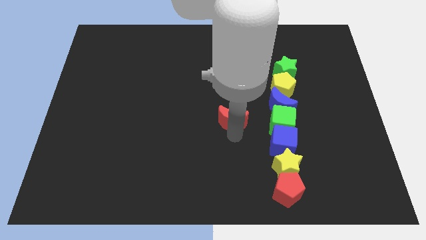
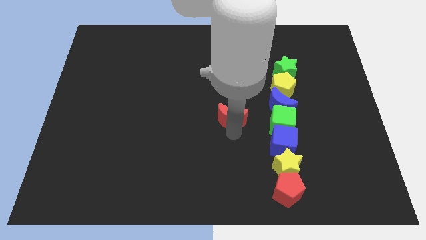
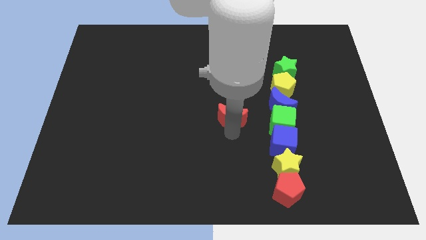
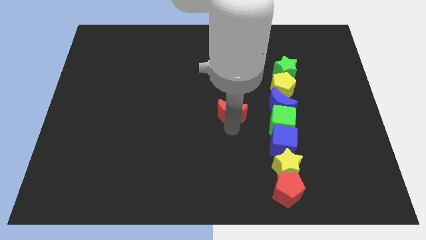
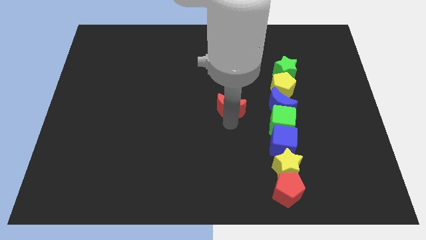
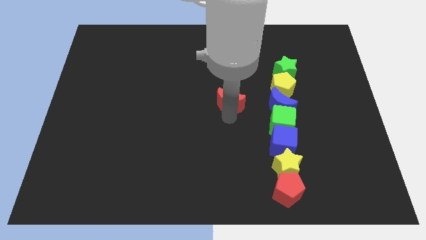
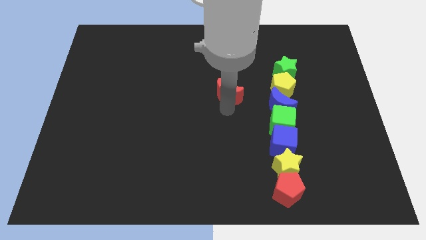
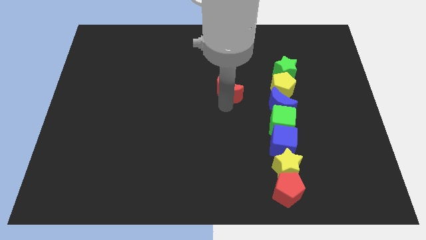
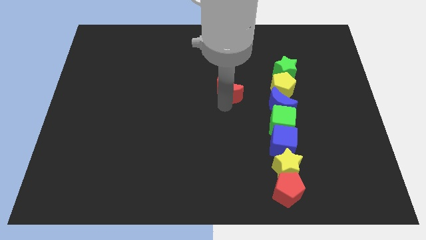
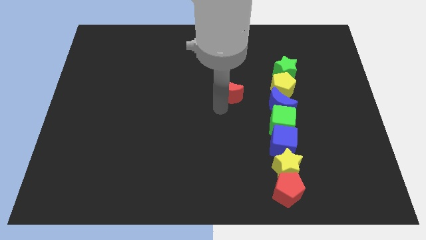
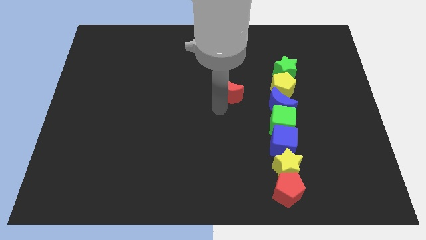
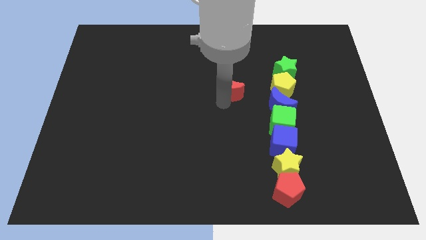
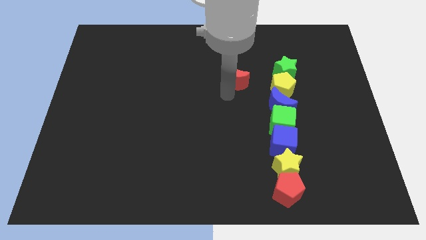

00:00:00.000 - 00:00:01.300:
move red moon upwards

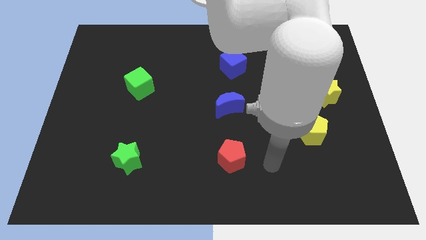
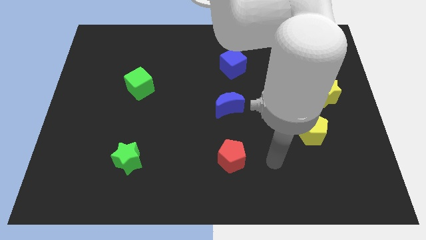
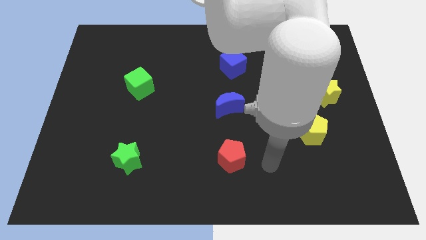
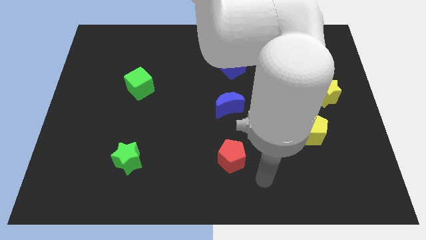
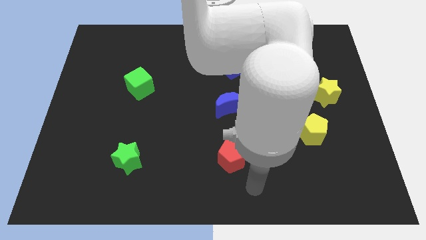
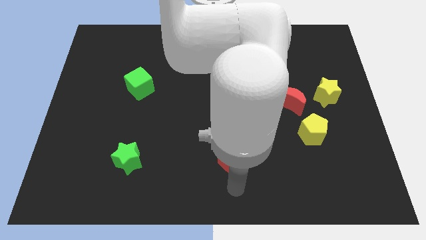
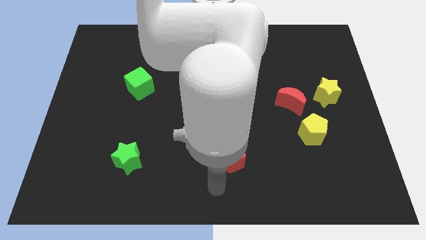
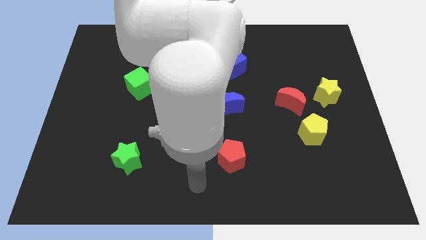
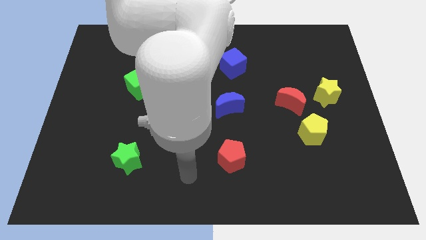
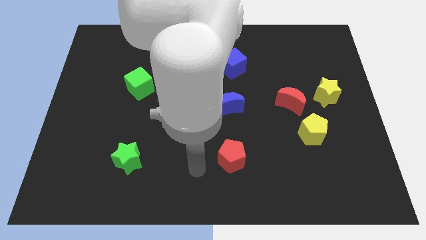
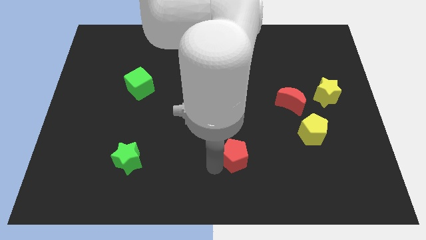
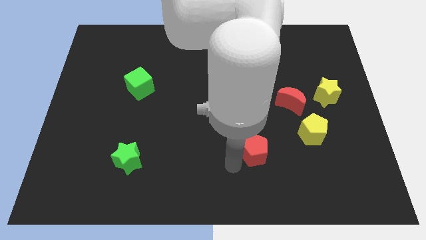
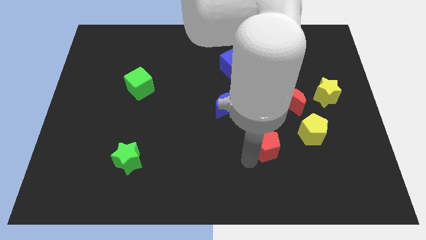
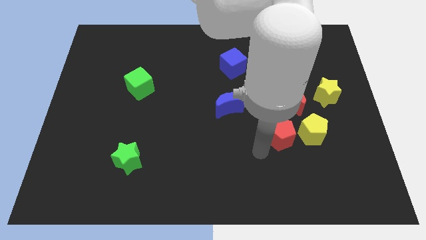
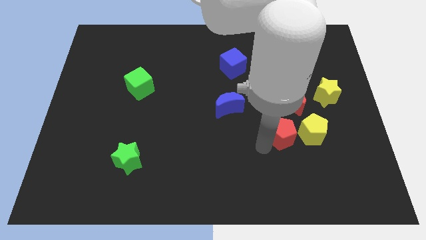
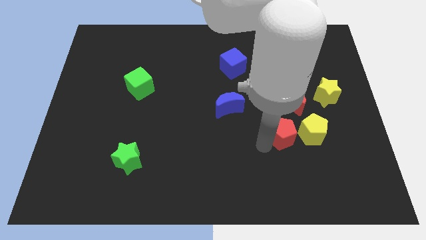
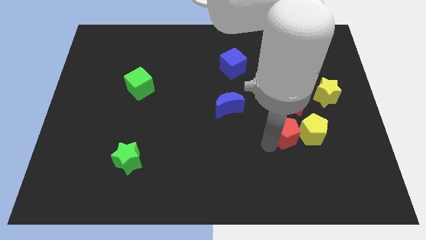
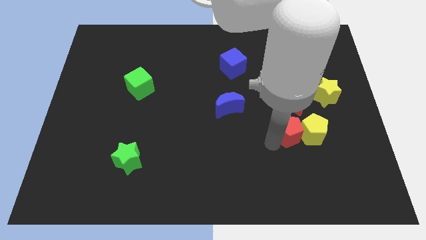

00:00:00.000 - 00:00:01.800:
place the red pentagon towards the left of the yellow pentagon

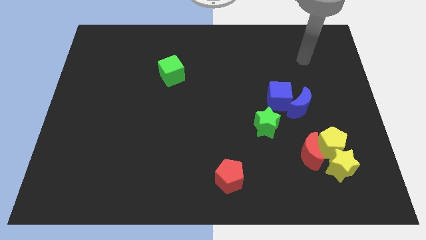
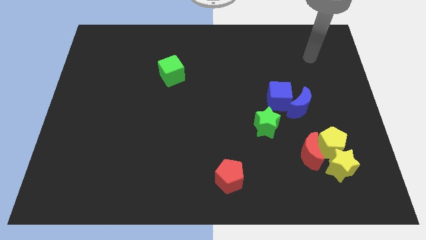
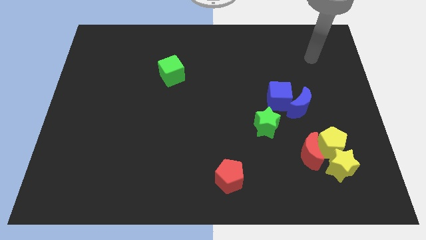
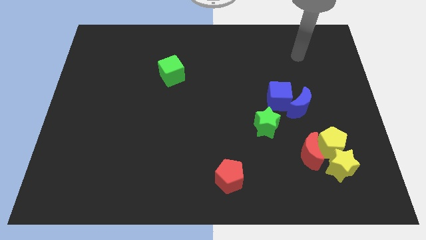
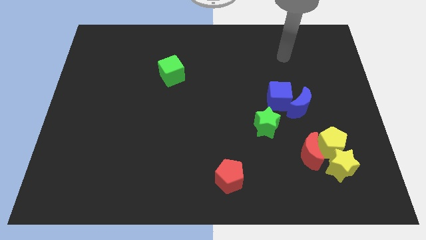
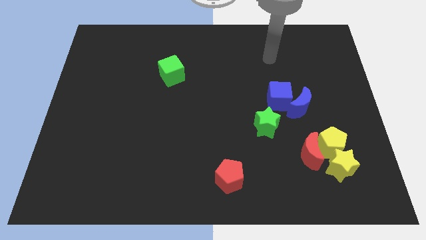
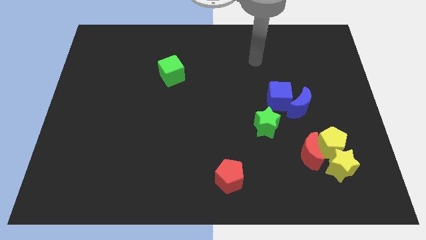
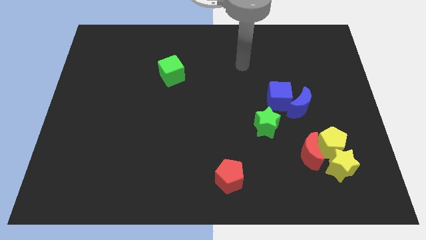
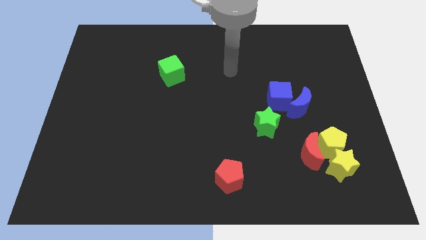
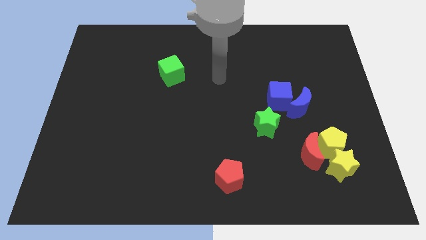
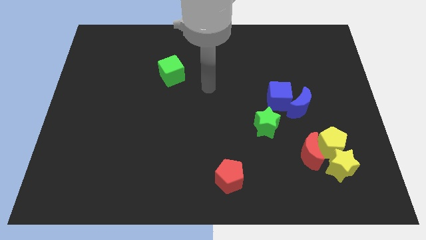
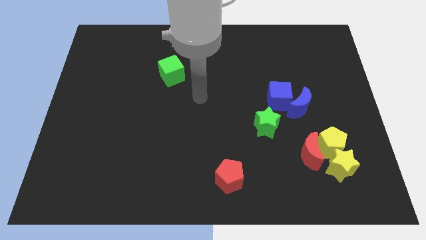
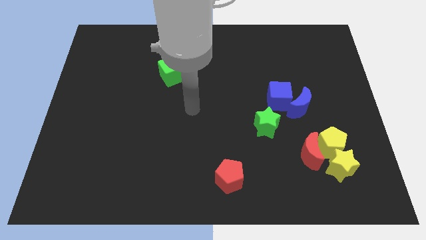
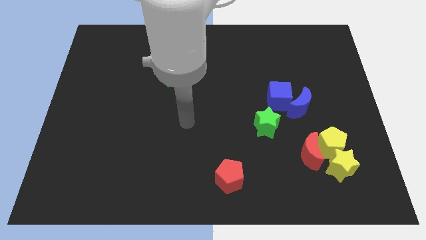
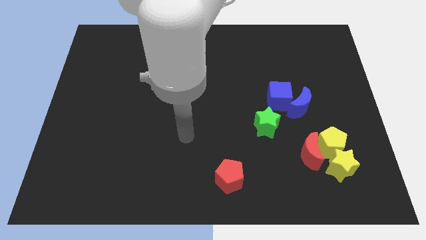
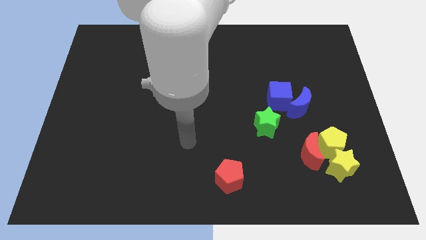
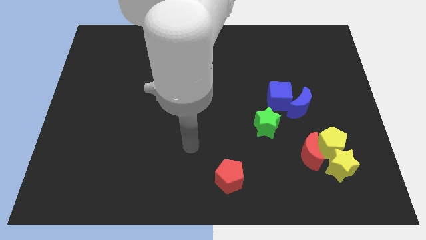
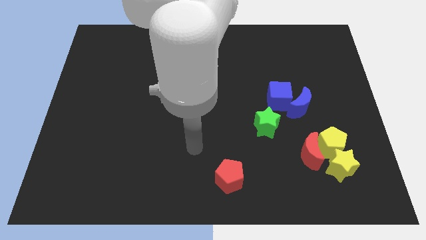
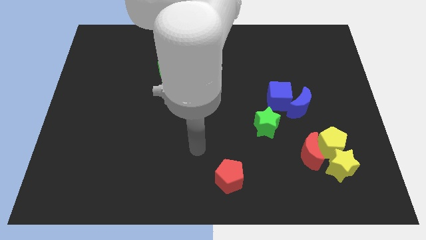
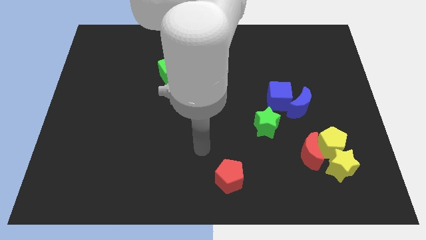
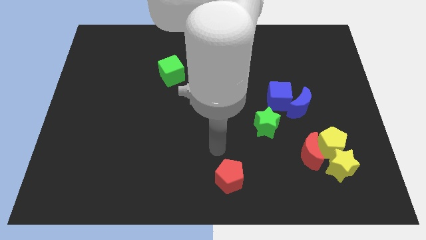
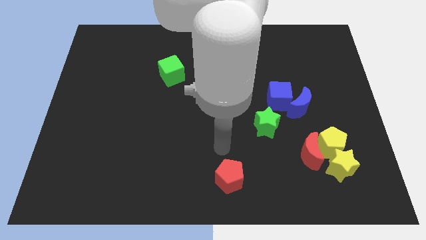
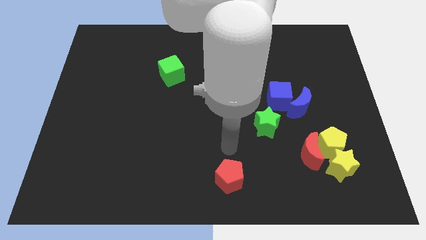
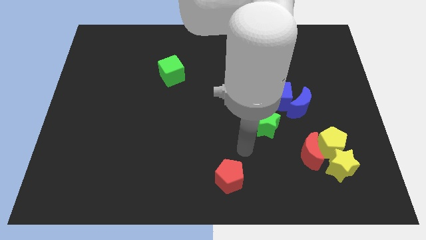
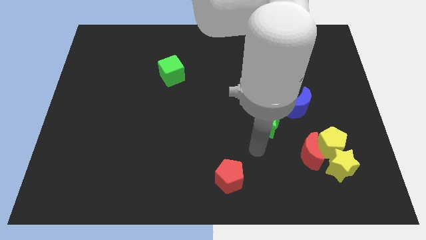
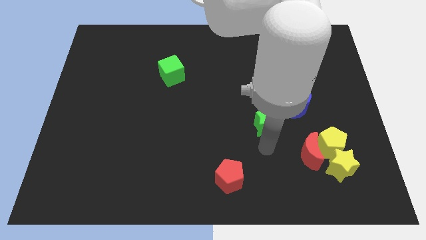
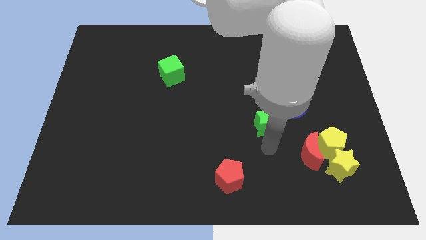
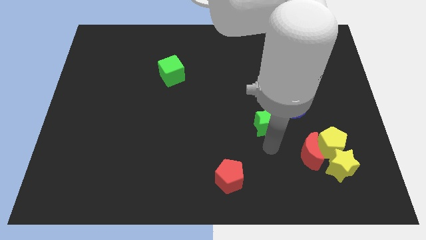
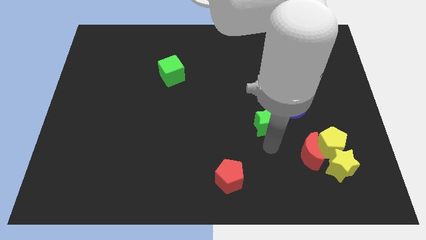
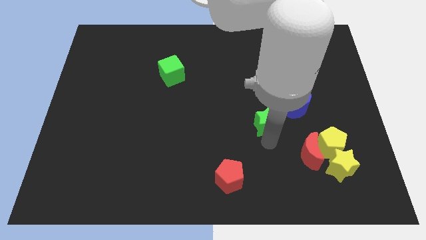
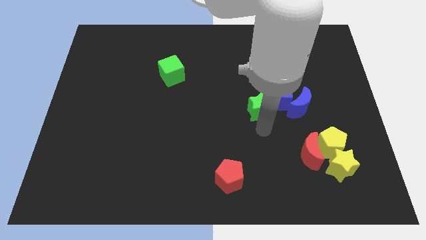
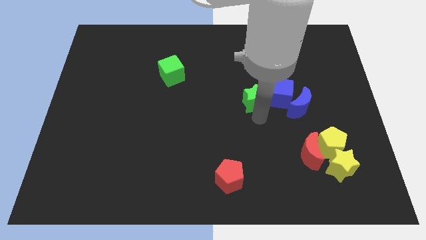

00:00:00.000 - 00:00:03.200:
move the green star into the blue cube

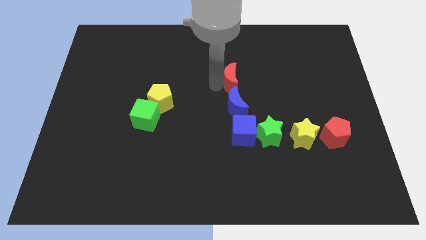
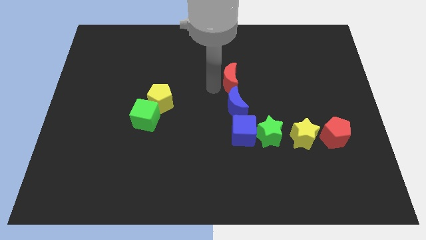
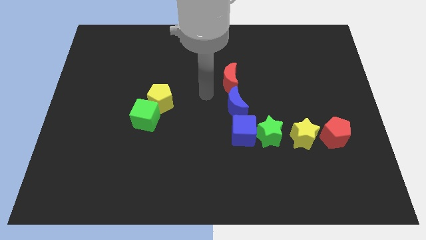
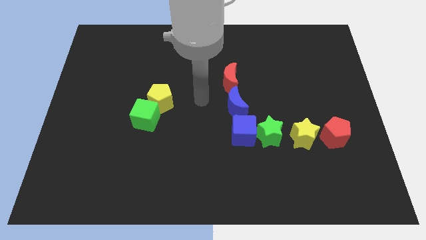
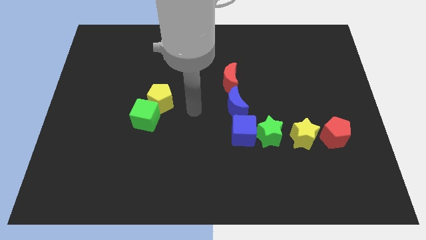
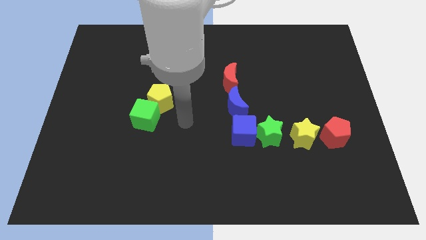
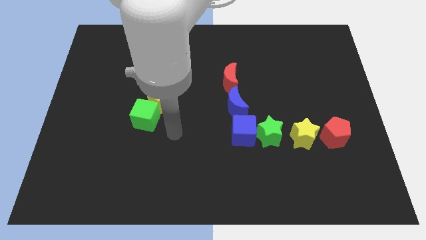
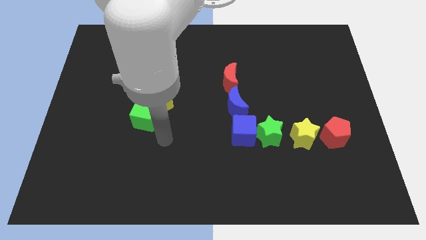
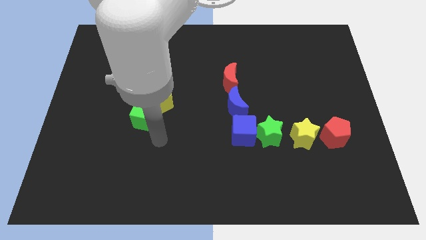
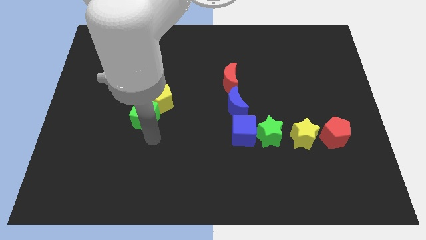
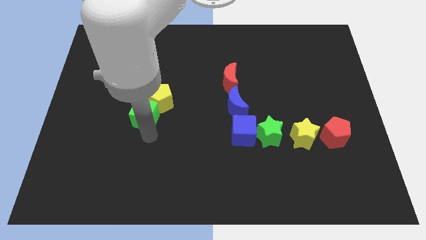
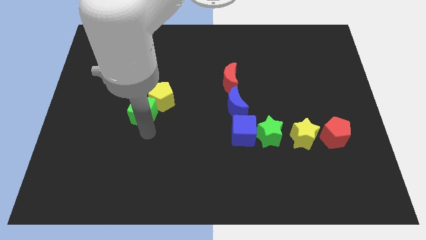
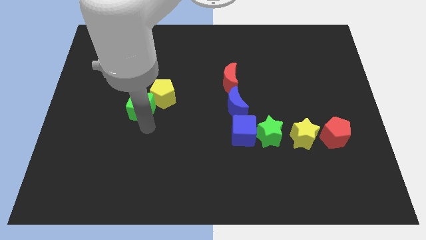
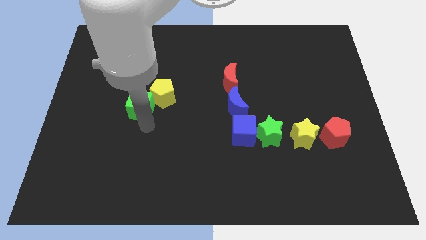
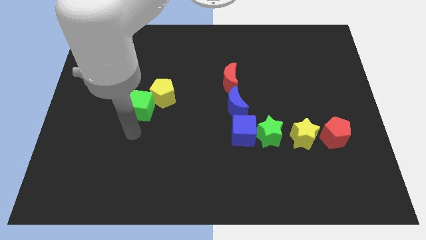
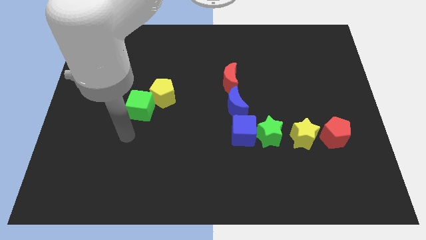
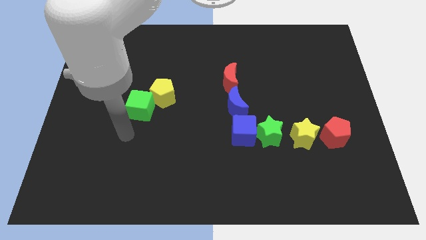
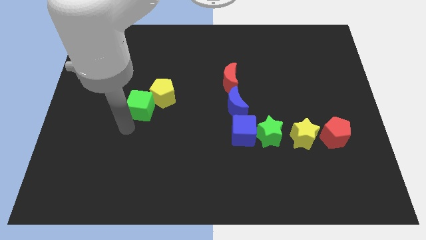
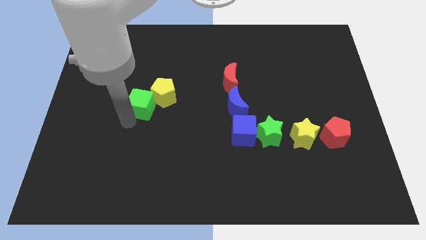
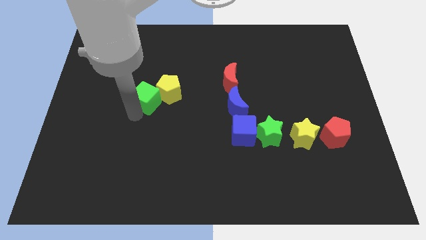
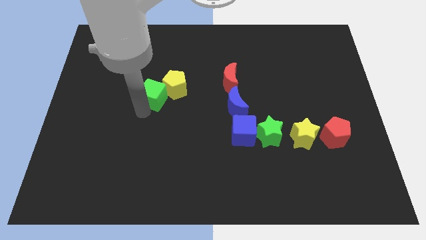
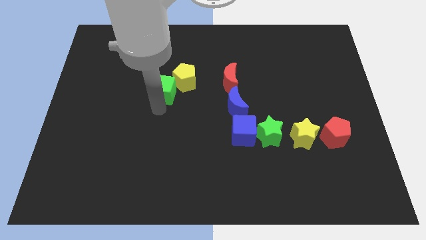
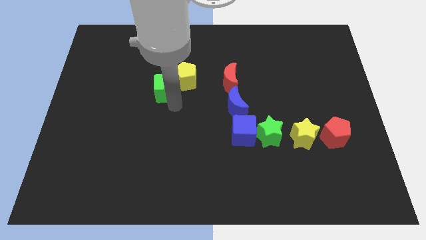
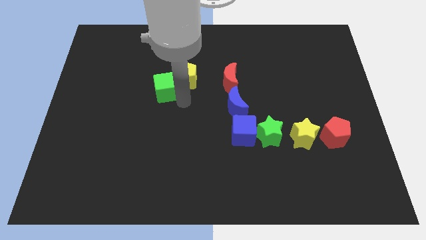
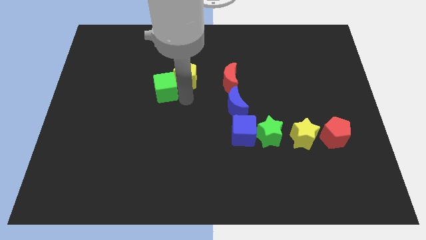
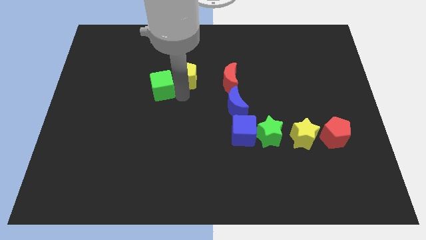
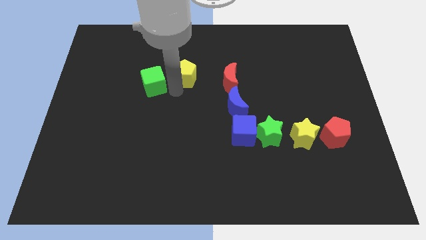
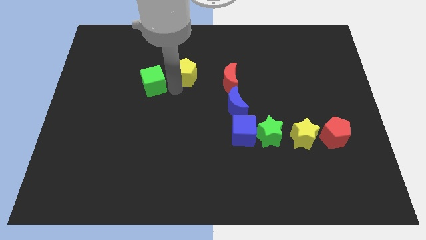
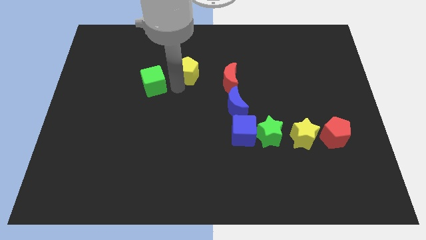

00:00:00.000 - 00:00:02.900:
move green cube and yellow pentagon towards top
